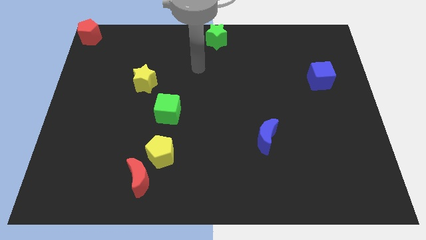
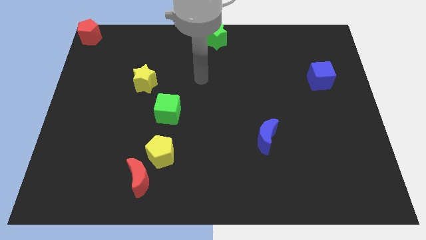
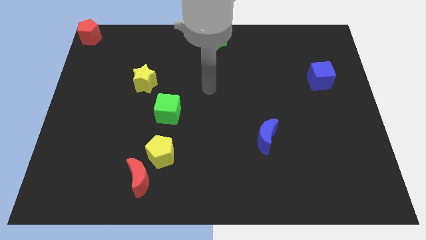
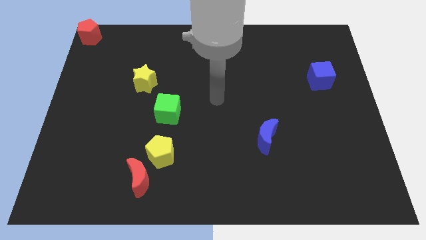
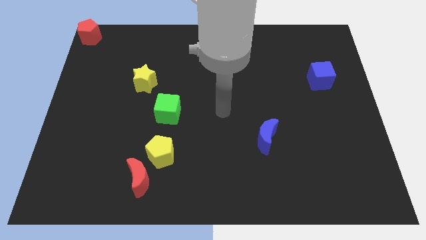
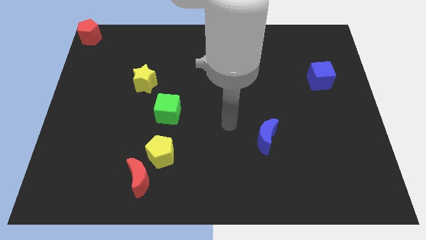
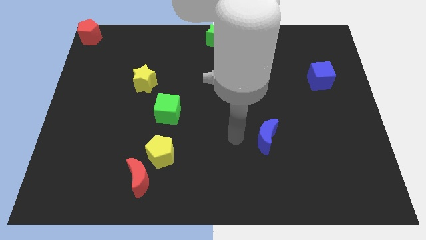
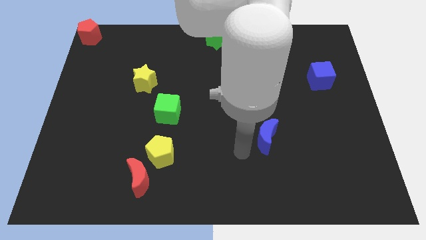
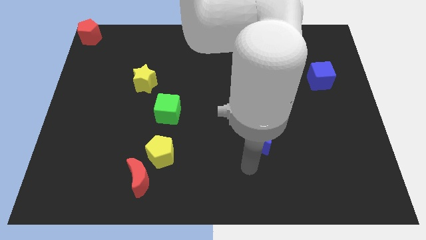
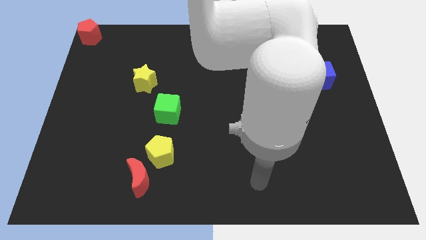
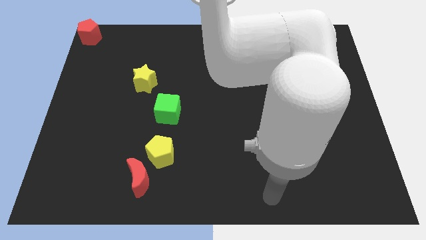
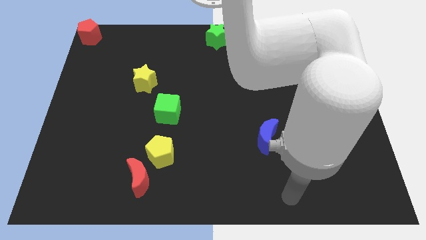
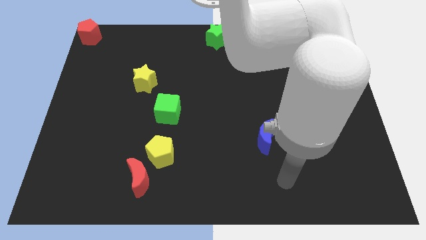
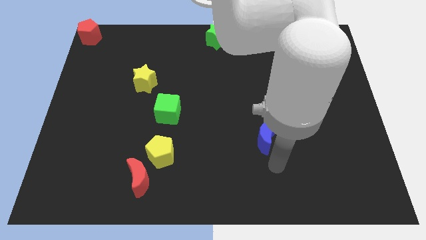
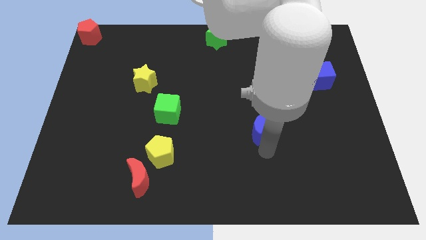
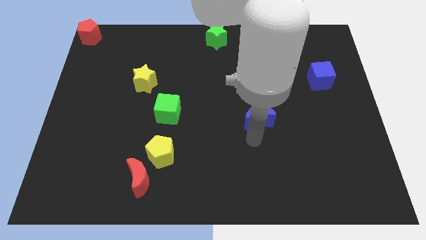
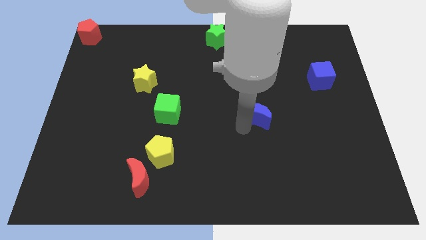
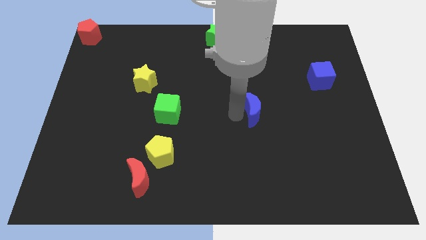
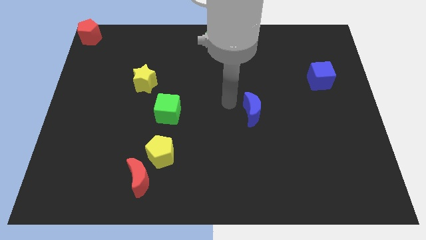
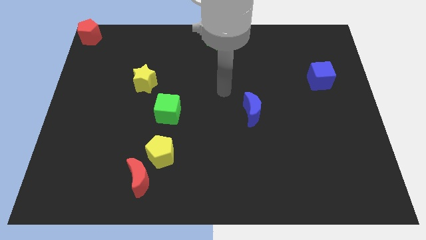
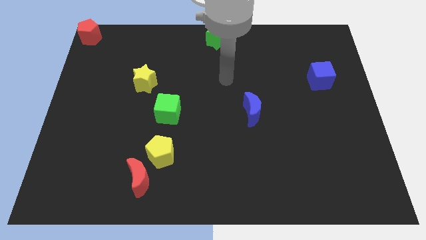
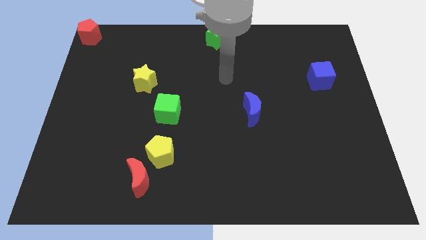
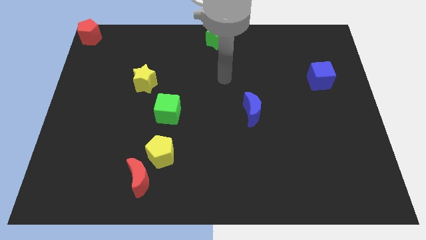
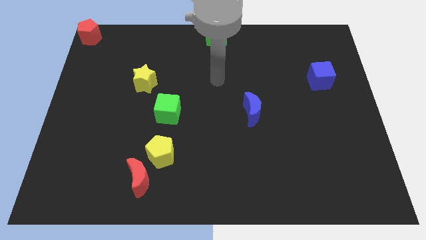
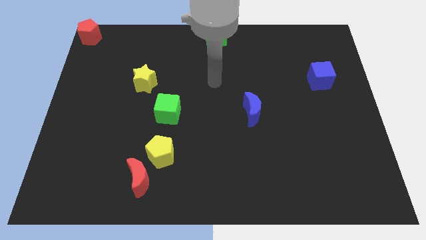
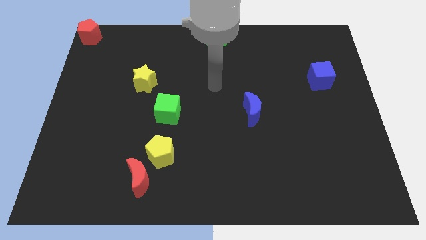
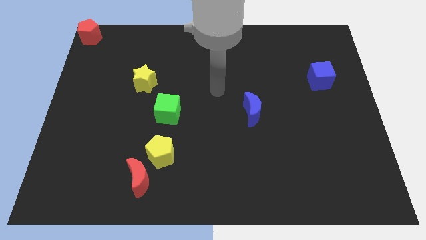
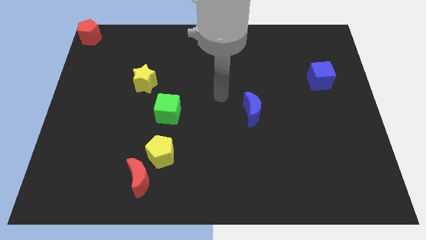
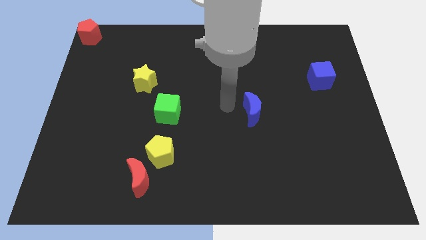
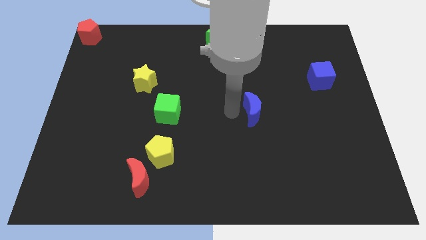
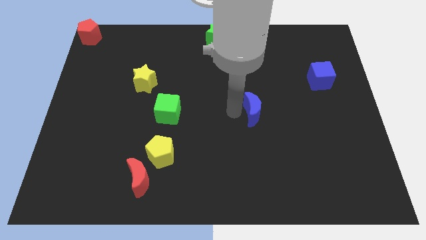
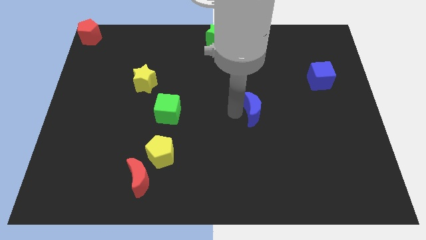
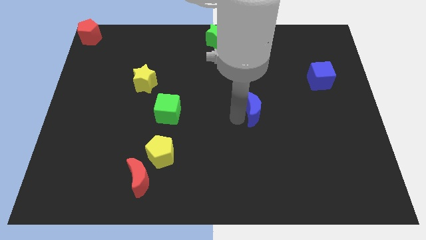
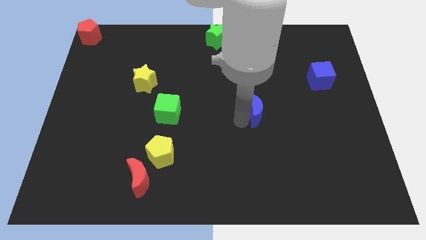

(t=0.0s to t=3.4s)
slightly move the blue crescent towards the center of the board

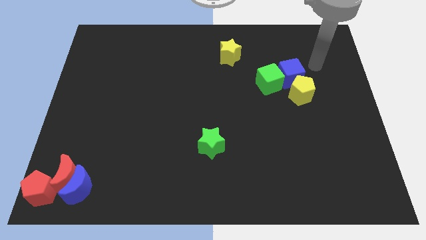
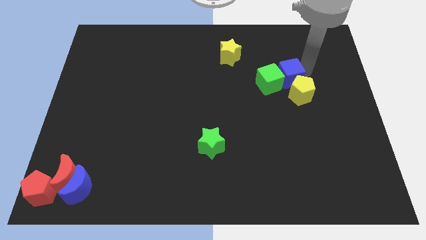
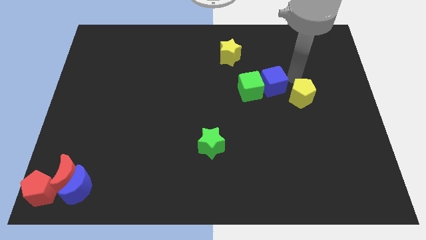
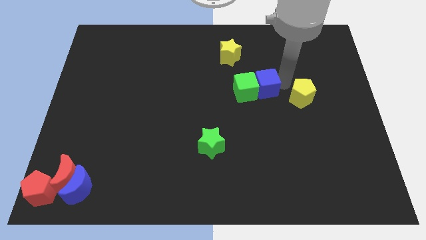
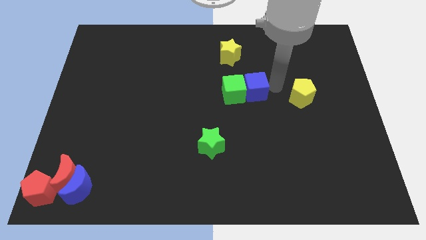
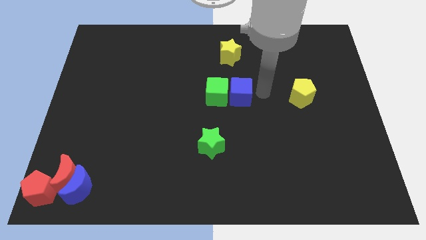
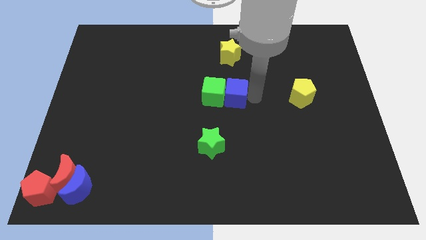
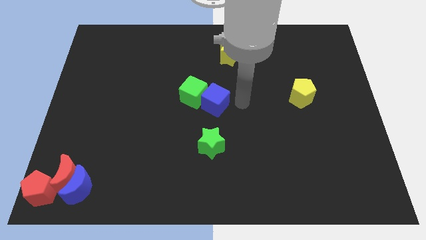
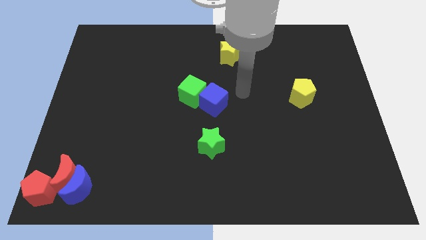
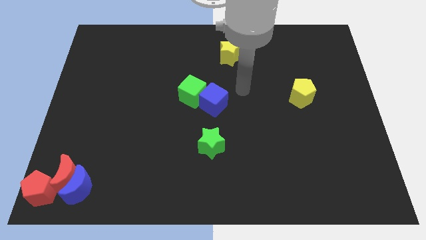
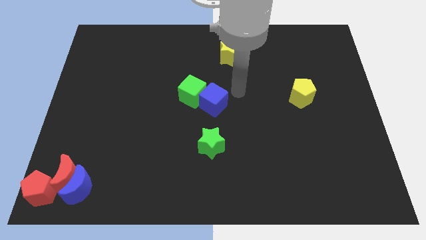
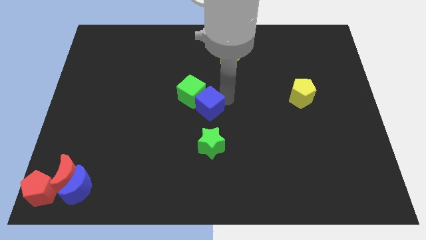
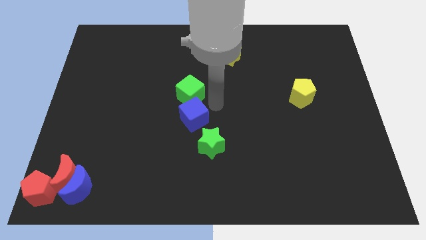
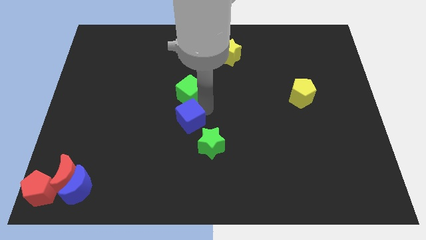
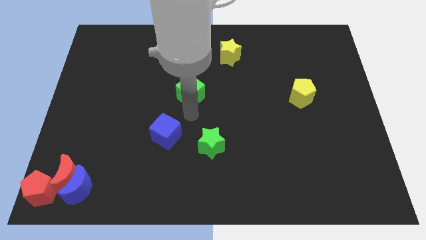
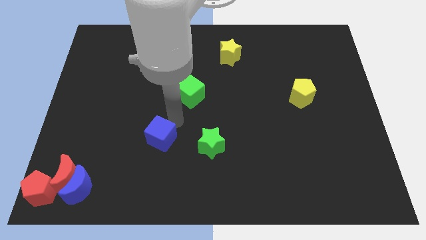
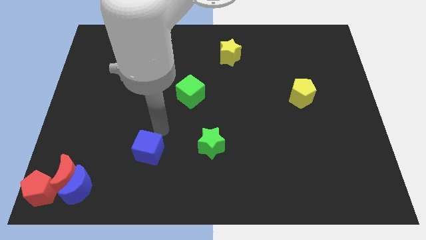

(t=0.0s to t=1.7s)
separate the blue cube and green cube from each other

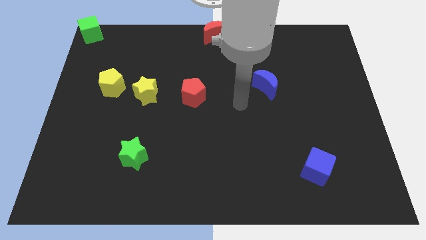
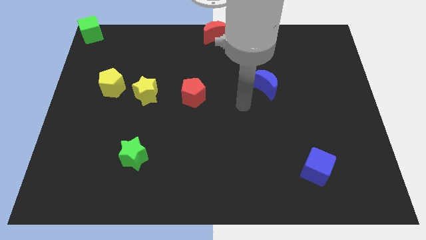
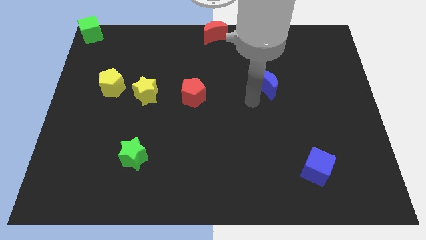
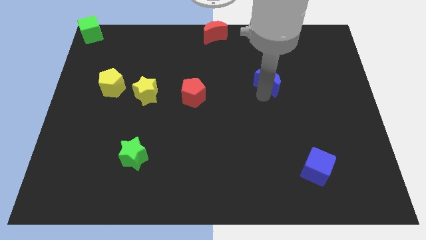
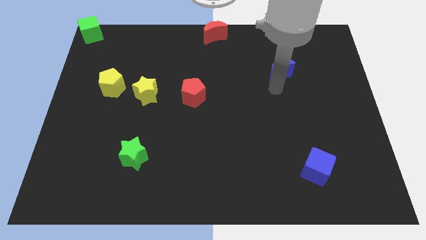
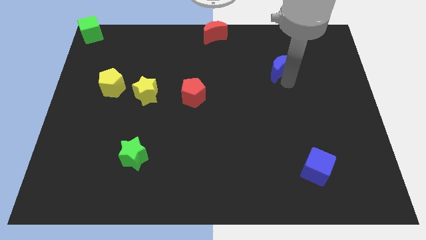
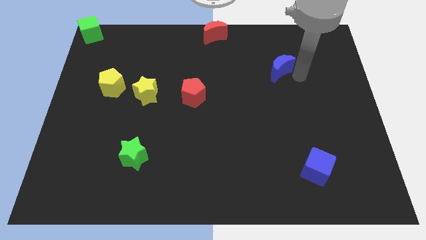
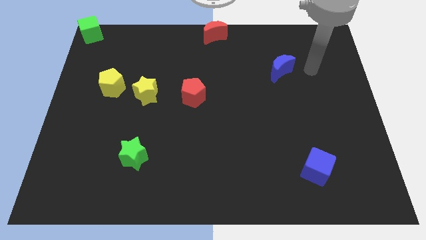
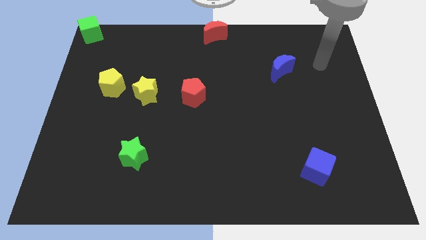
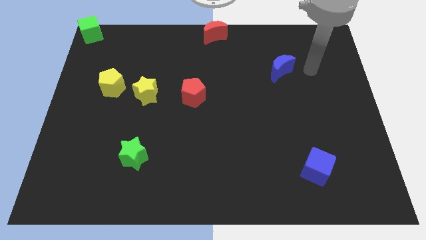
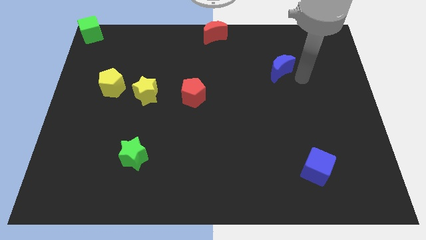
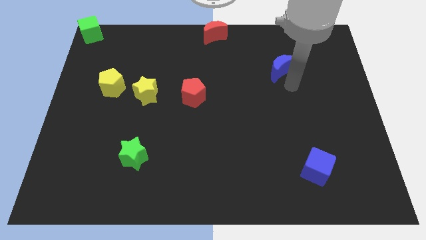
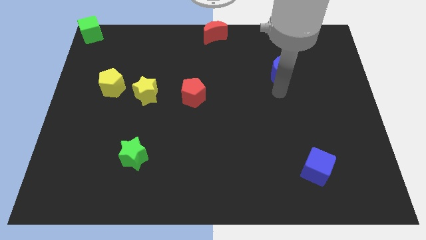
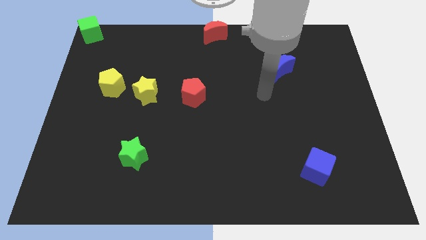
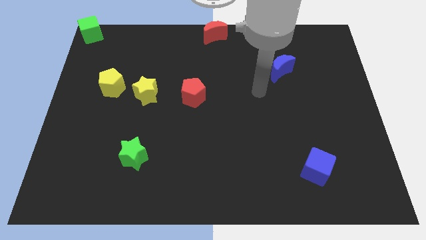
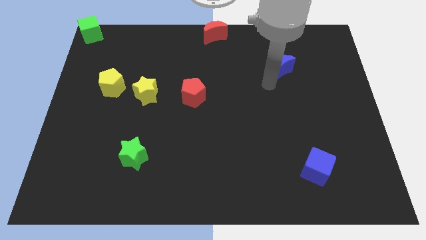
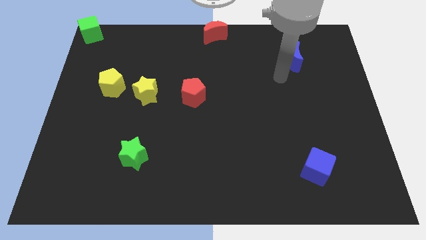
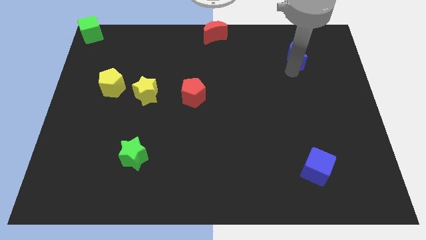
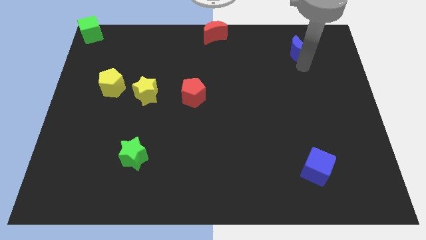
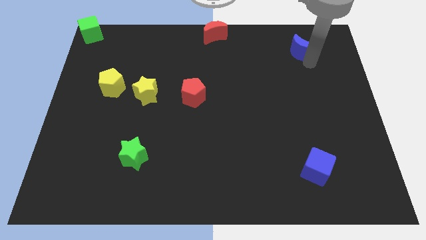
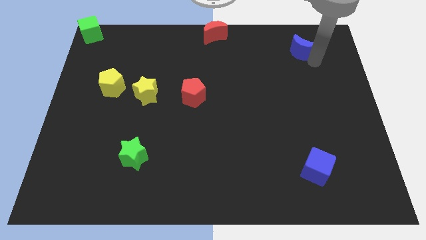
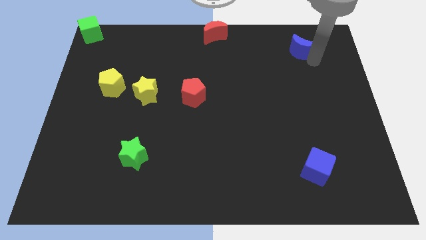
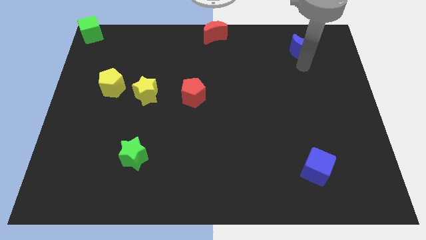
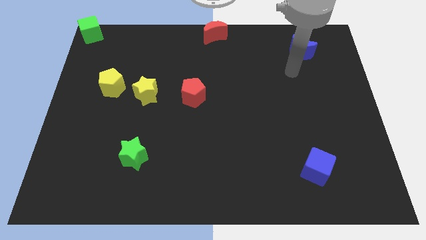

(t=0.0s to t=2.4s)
push the blue moon towards the top right corner of the board

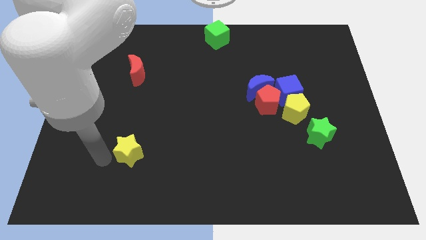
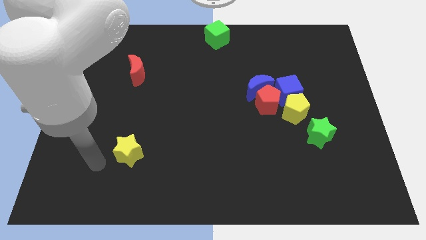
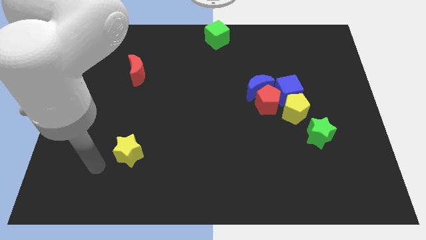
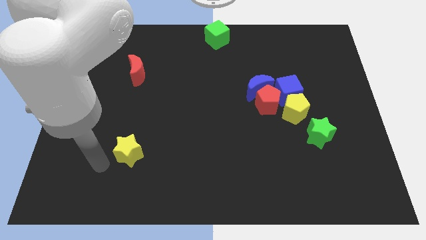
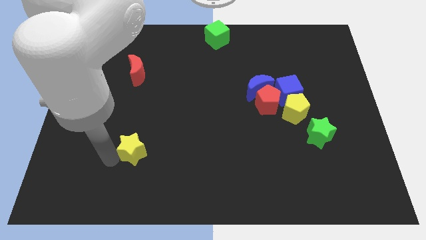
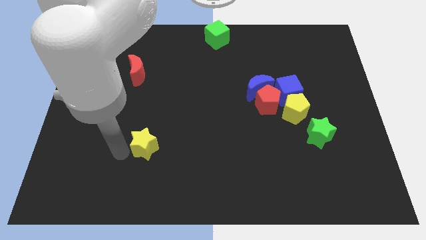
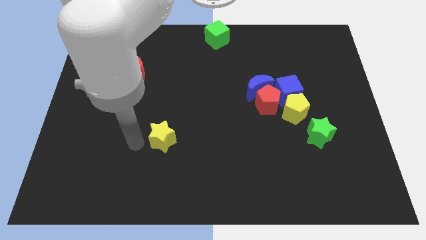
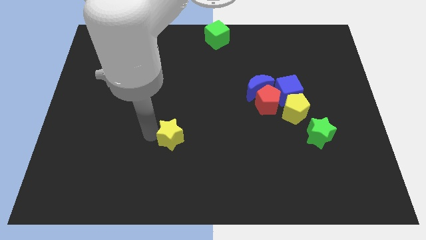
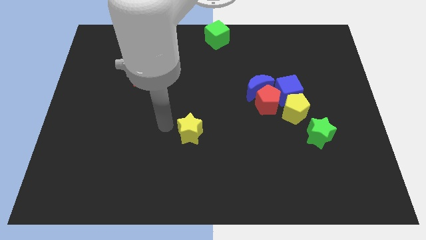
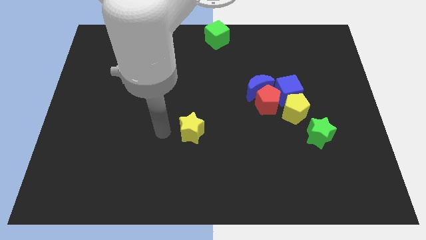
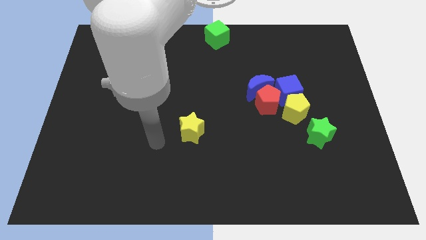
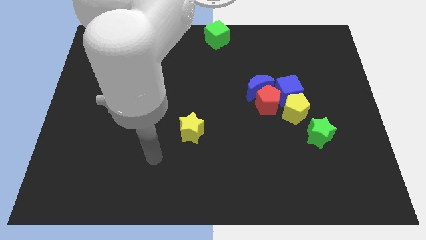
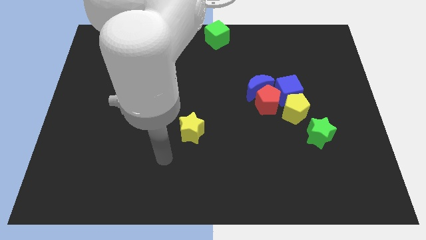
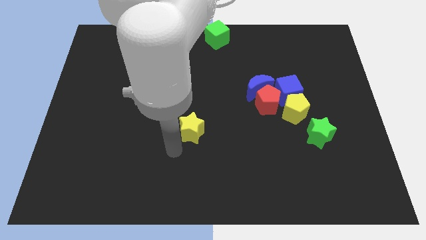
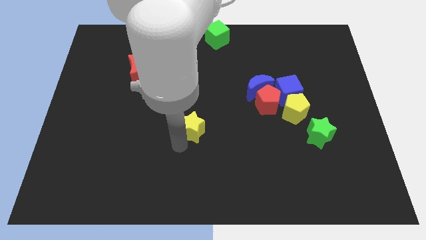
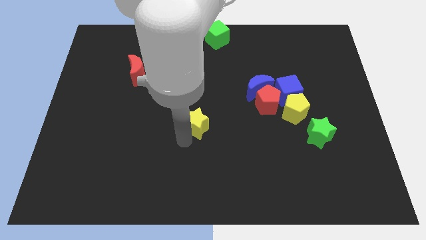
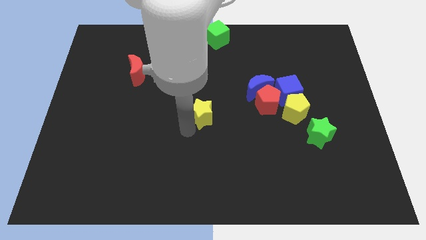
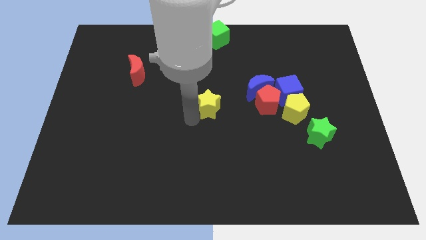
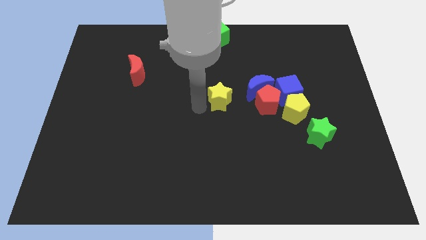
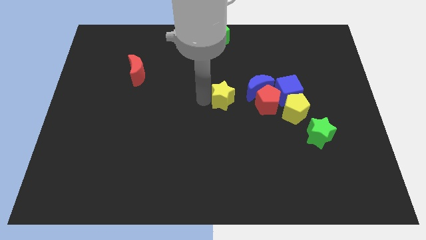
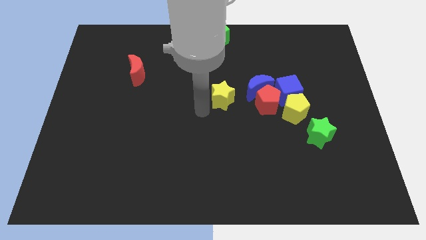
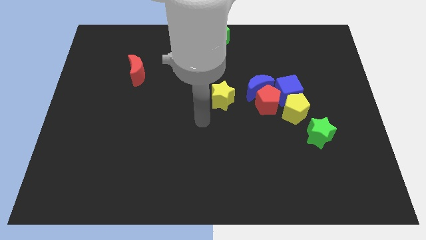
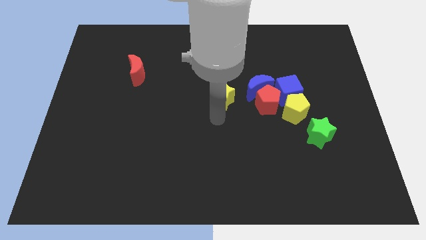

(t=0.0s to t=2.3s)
place the yellow star at the center of the board
